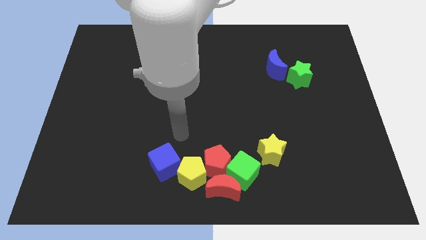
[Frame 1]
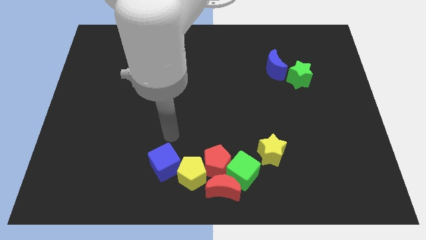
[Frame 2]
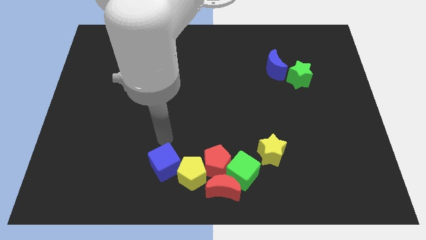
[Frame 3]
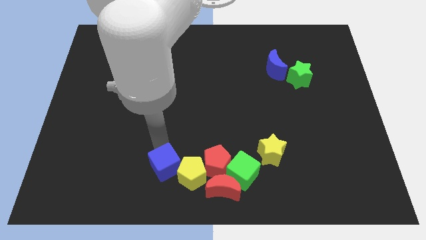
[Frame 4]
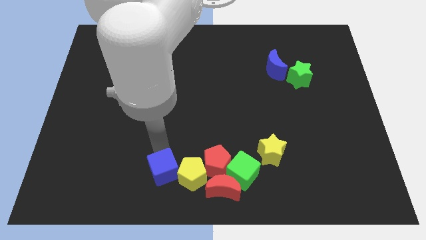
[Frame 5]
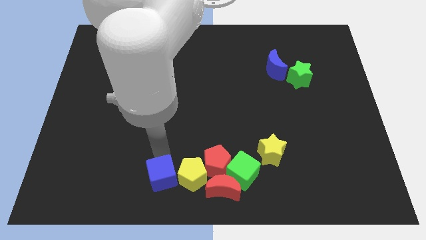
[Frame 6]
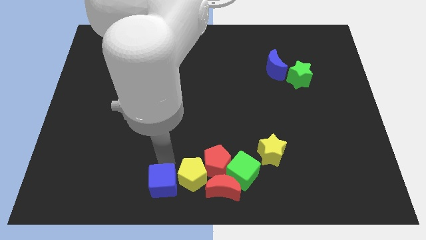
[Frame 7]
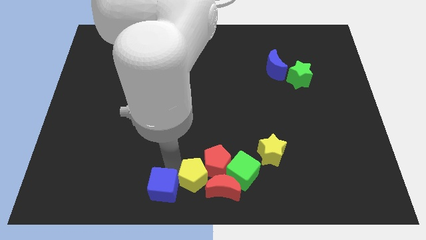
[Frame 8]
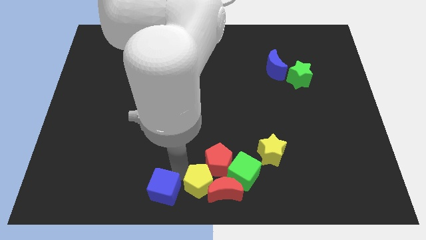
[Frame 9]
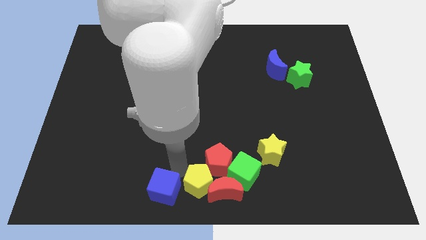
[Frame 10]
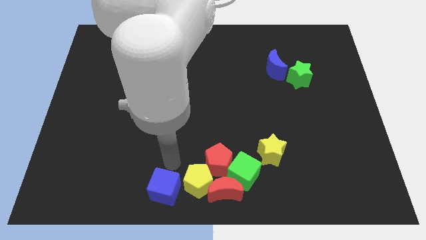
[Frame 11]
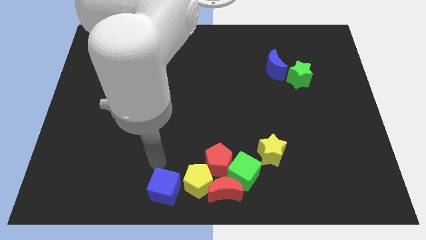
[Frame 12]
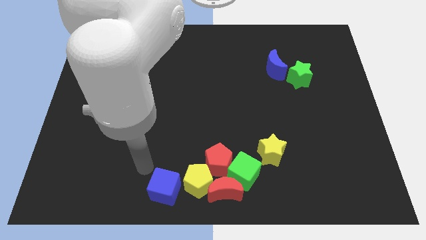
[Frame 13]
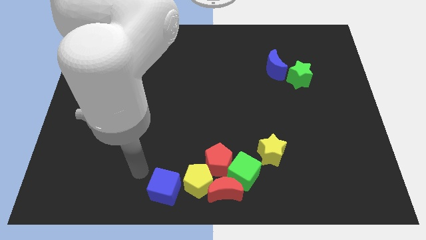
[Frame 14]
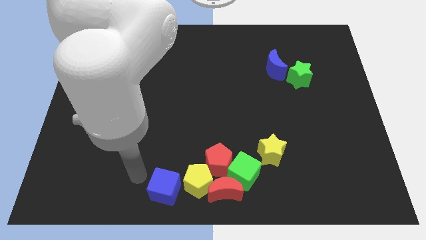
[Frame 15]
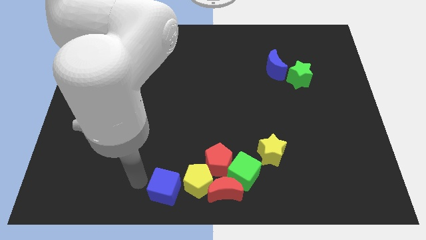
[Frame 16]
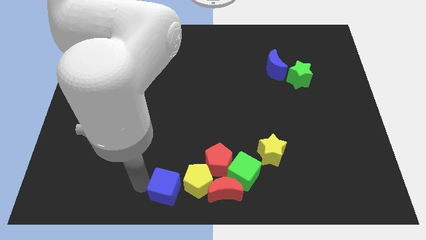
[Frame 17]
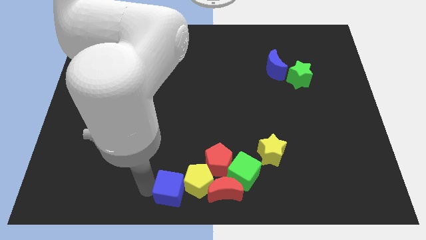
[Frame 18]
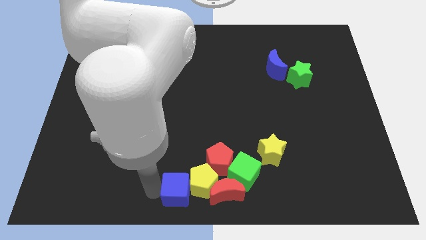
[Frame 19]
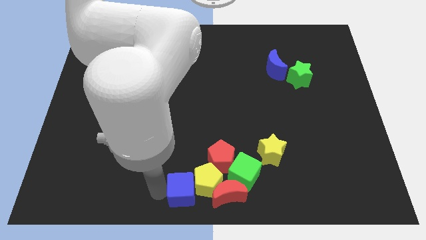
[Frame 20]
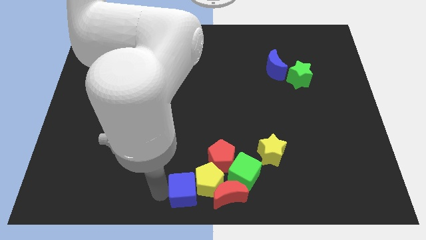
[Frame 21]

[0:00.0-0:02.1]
slide blue cube into yellow pentagon

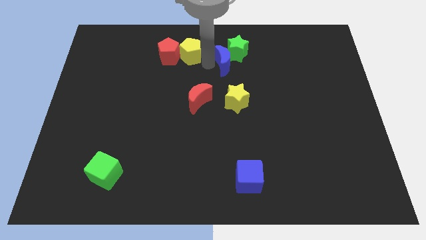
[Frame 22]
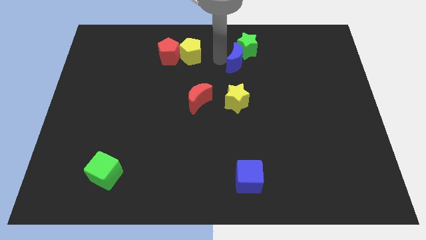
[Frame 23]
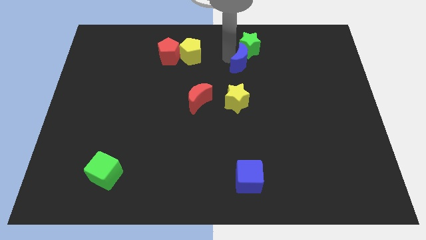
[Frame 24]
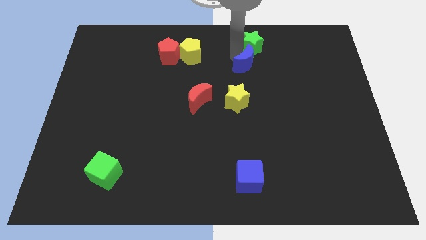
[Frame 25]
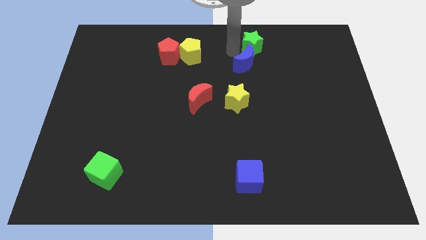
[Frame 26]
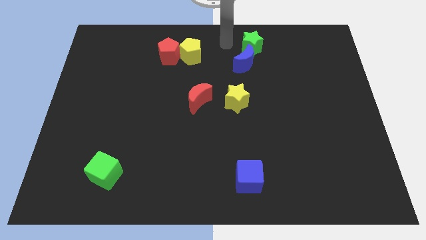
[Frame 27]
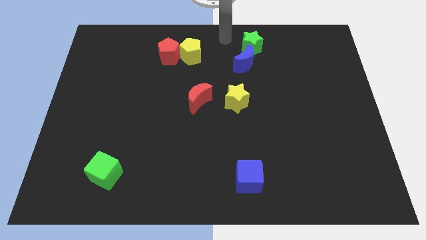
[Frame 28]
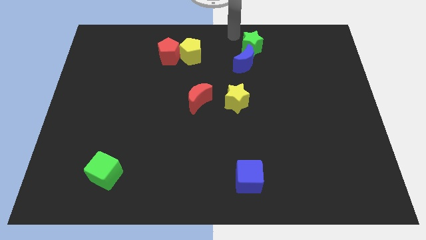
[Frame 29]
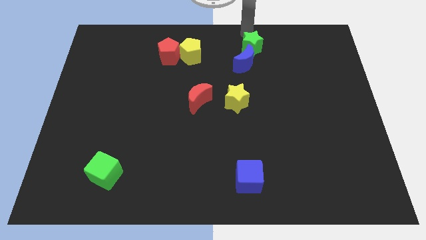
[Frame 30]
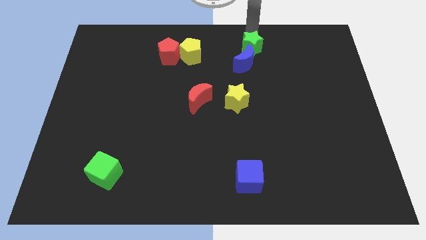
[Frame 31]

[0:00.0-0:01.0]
place the arm above the green star

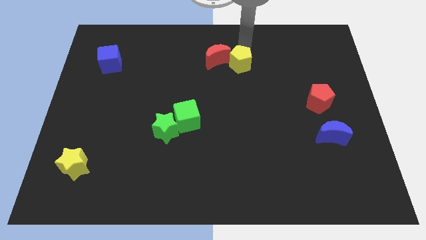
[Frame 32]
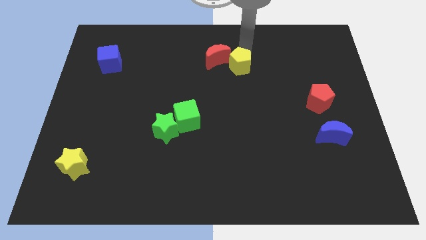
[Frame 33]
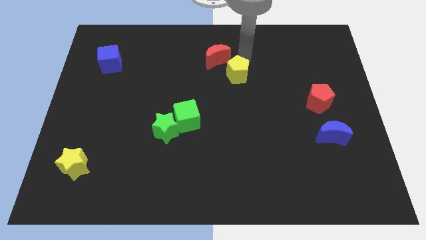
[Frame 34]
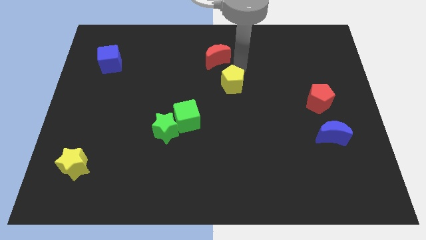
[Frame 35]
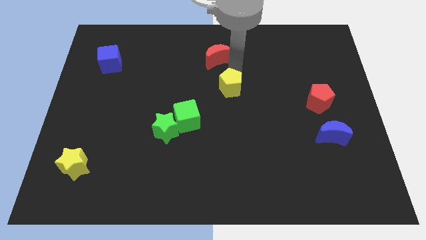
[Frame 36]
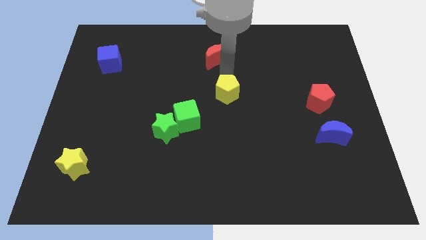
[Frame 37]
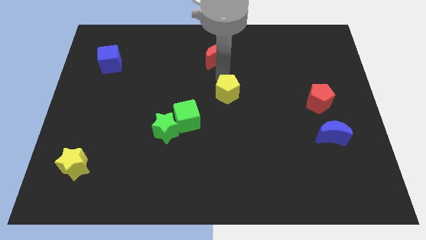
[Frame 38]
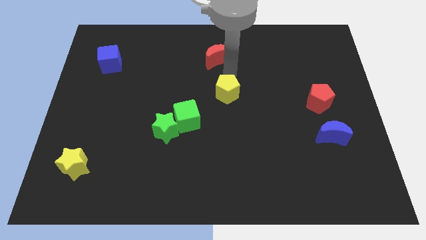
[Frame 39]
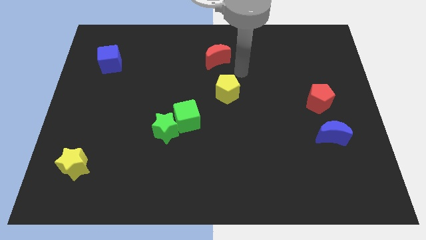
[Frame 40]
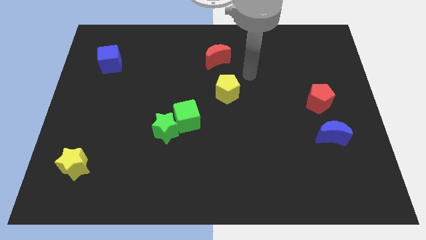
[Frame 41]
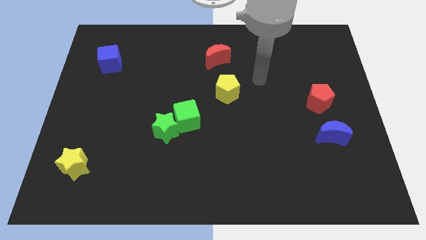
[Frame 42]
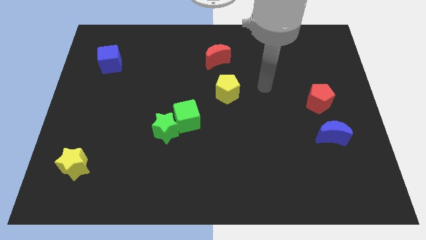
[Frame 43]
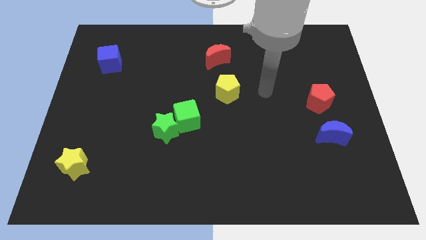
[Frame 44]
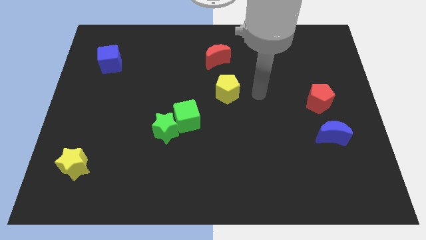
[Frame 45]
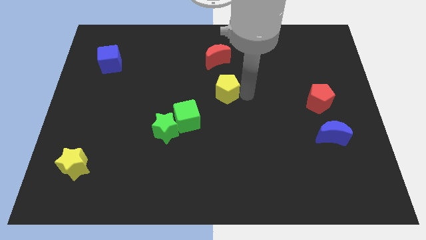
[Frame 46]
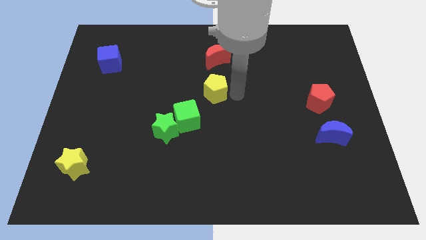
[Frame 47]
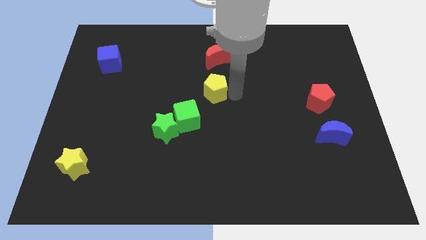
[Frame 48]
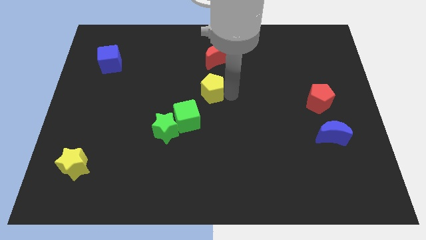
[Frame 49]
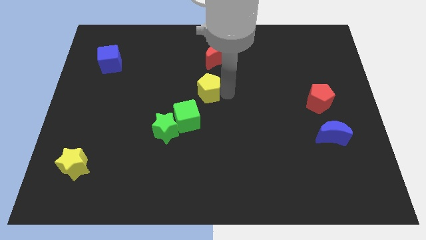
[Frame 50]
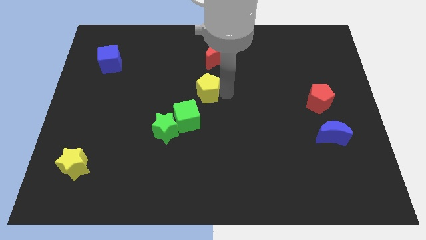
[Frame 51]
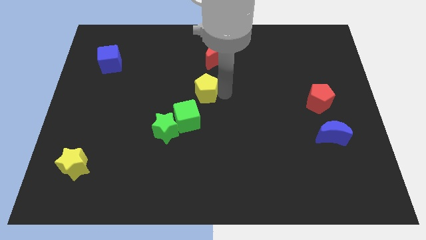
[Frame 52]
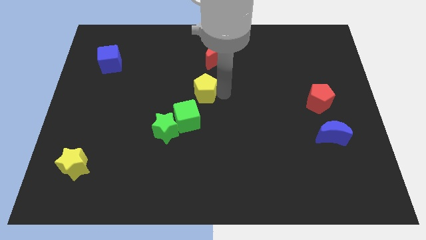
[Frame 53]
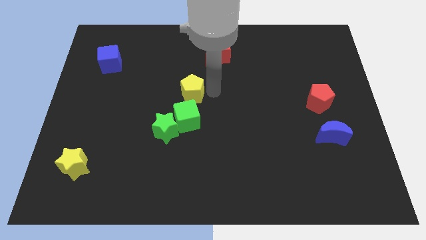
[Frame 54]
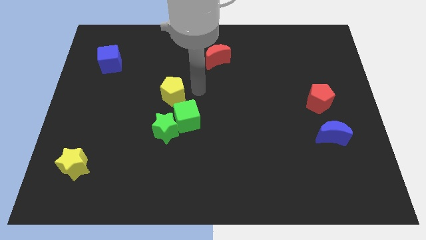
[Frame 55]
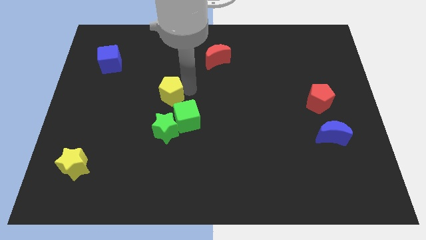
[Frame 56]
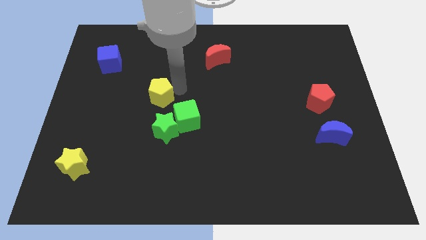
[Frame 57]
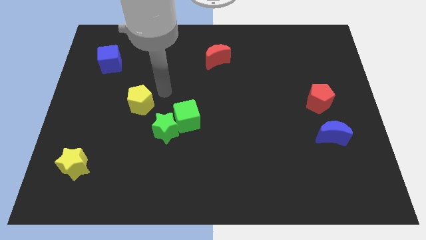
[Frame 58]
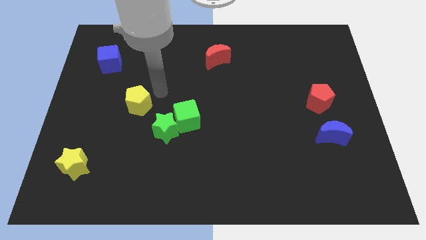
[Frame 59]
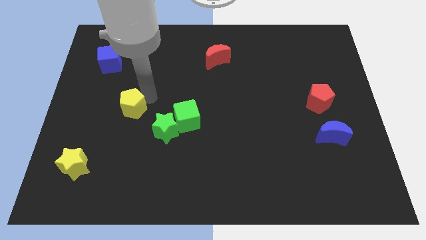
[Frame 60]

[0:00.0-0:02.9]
drag the yellow pentagon to the left

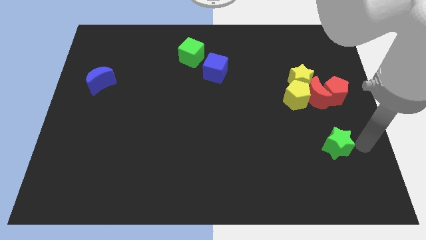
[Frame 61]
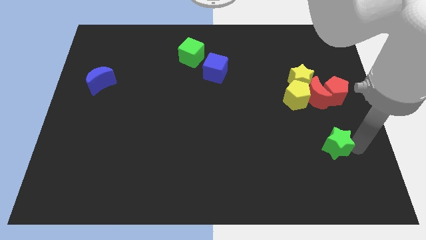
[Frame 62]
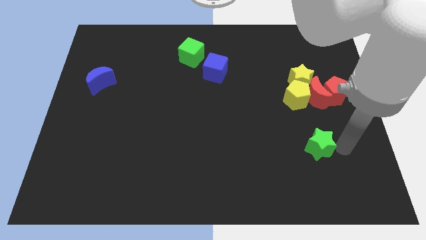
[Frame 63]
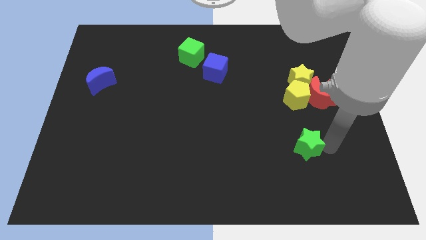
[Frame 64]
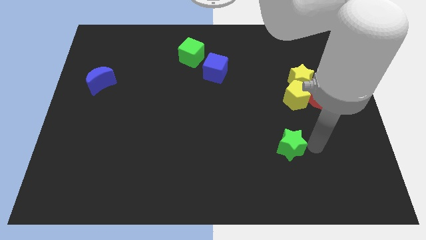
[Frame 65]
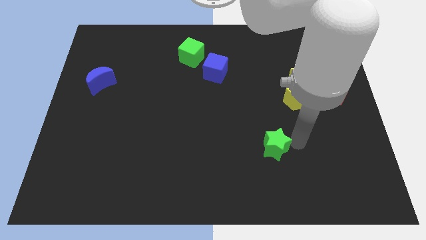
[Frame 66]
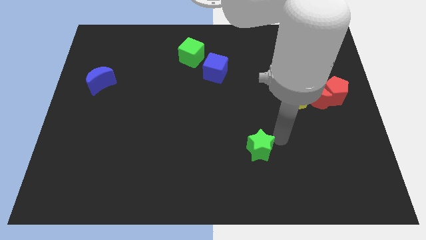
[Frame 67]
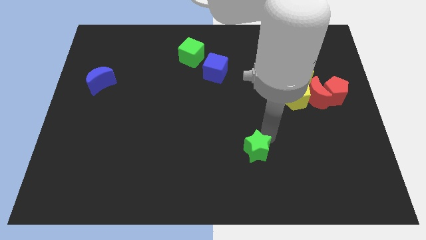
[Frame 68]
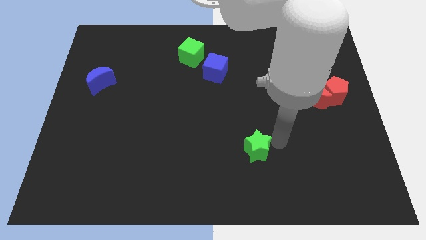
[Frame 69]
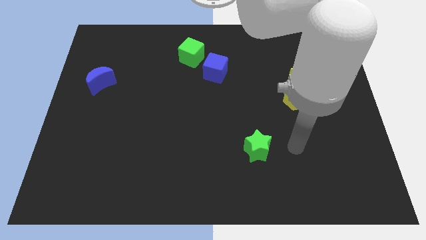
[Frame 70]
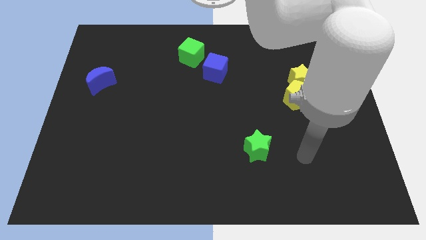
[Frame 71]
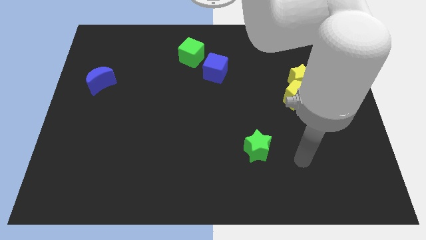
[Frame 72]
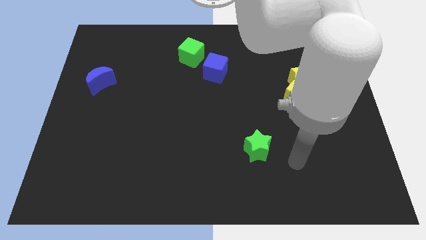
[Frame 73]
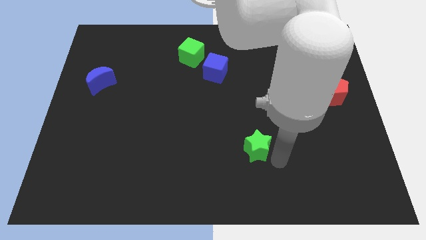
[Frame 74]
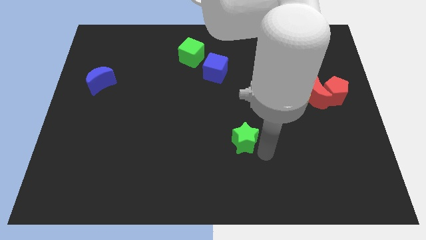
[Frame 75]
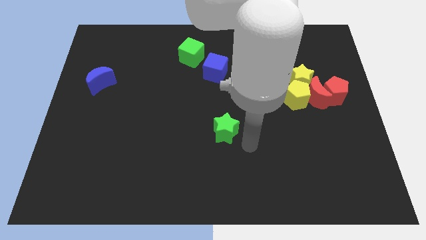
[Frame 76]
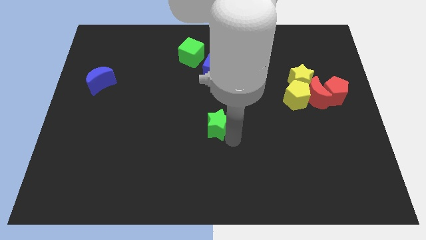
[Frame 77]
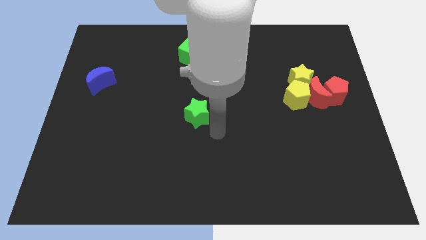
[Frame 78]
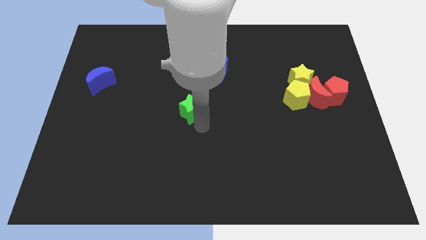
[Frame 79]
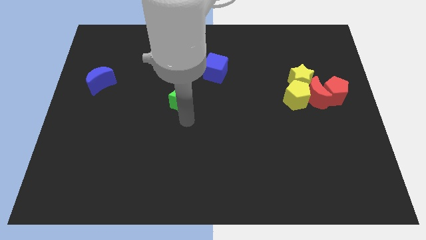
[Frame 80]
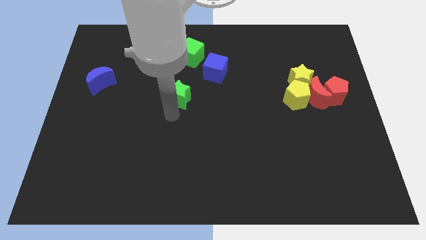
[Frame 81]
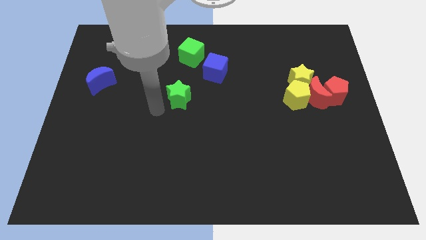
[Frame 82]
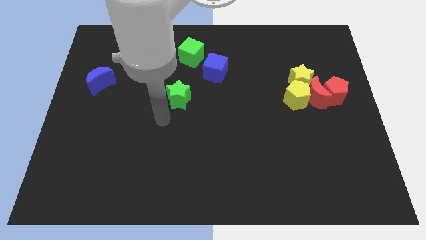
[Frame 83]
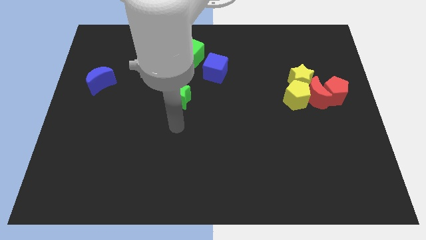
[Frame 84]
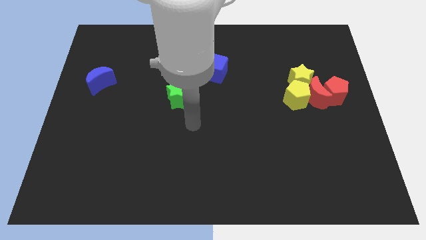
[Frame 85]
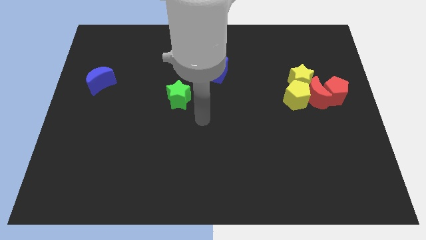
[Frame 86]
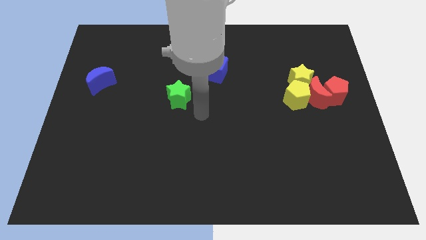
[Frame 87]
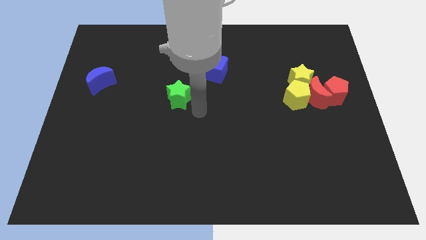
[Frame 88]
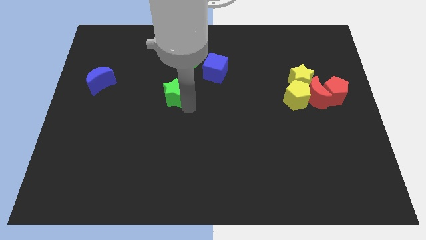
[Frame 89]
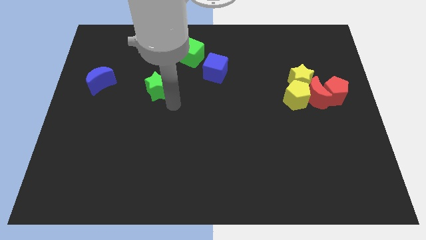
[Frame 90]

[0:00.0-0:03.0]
push green star below green cube

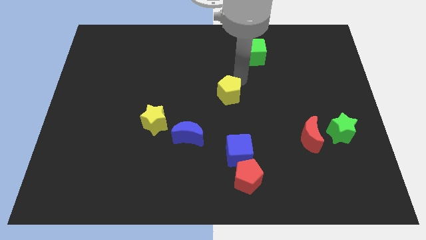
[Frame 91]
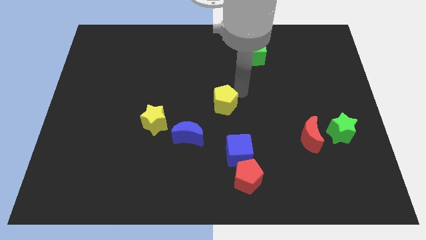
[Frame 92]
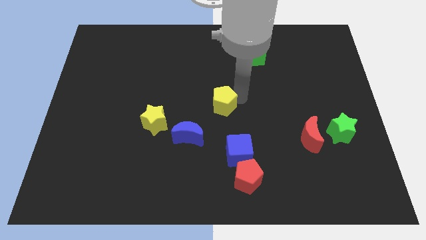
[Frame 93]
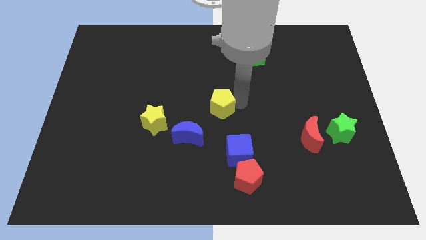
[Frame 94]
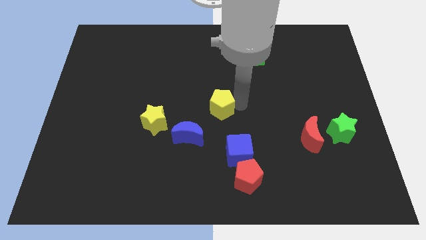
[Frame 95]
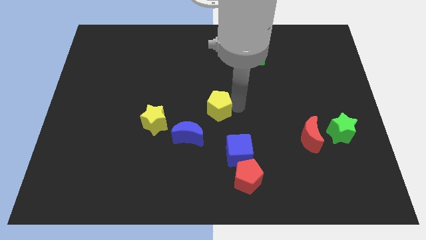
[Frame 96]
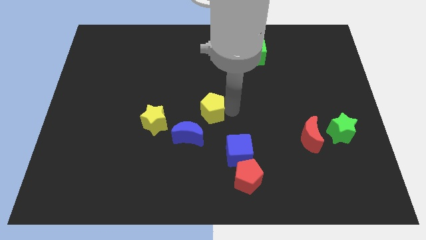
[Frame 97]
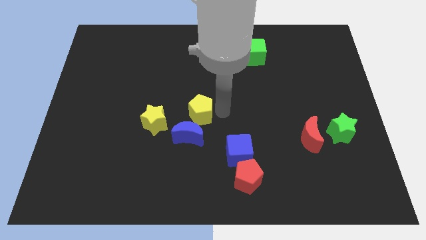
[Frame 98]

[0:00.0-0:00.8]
move the yellow pentagon to the center of the board
